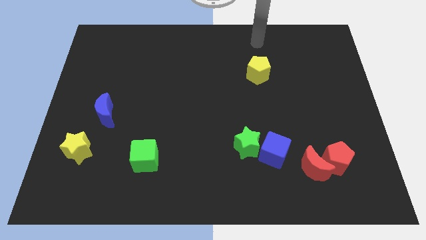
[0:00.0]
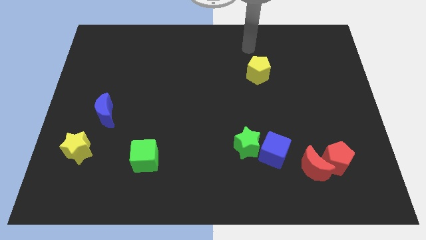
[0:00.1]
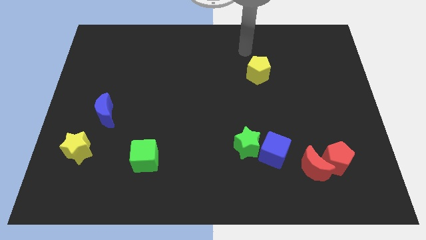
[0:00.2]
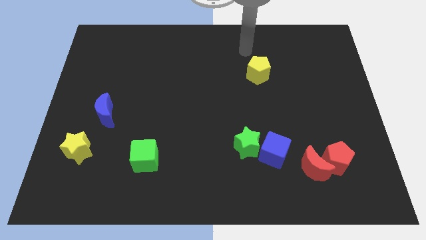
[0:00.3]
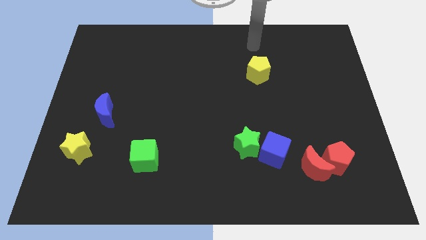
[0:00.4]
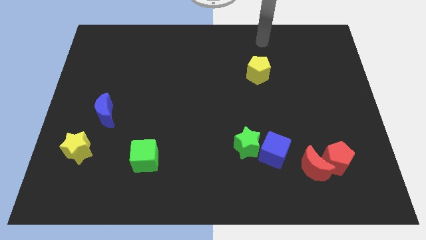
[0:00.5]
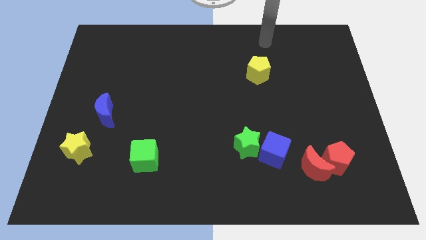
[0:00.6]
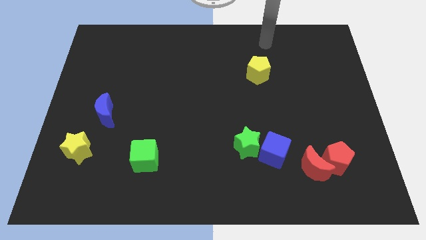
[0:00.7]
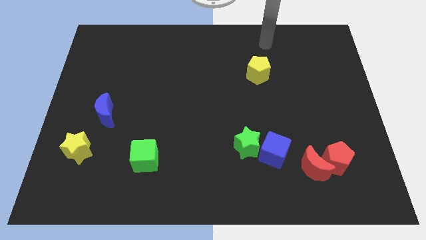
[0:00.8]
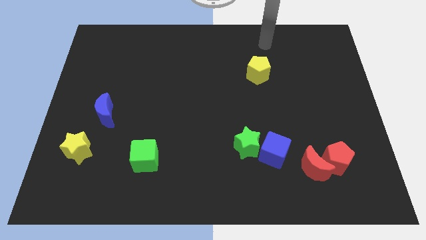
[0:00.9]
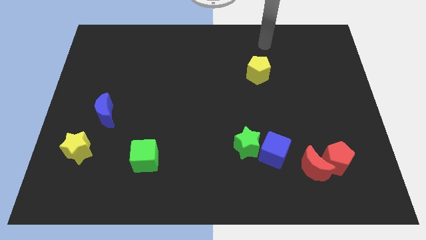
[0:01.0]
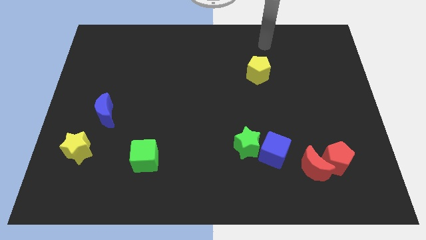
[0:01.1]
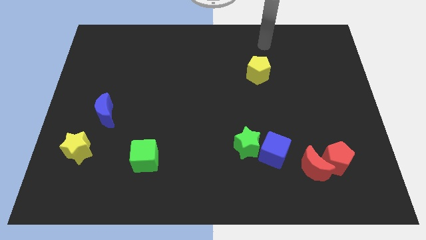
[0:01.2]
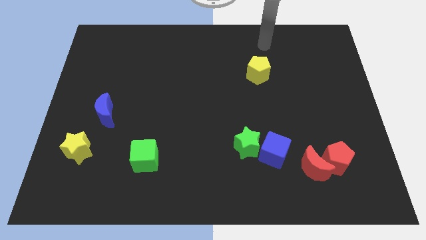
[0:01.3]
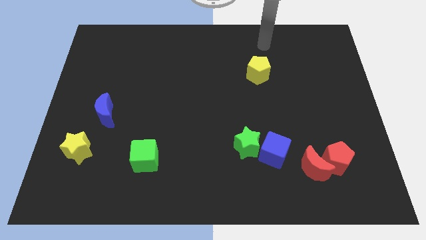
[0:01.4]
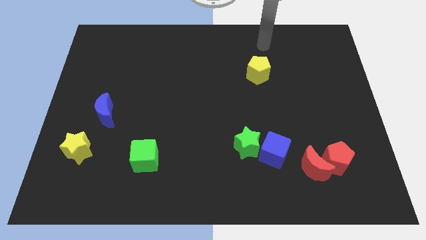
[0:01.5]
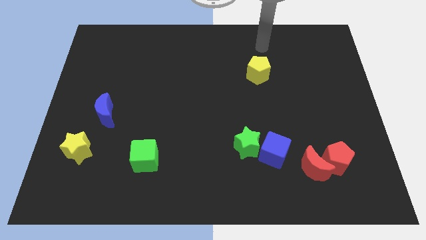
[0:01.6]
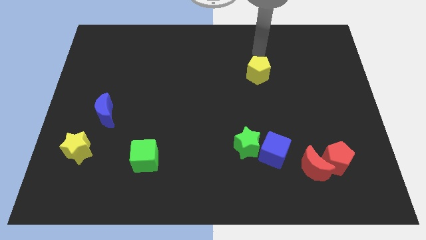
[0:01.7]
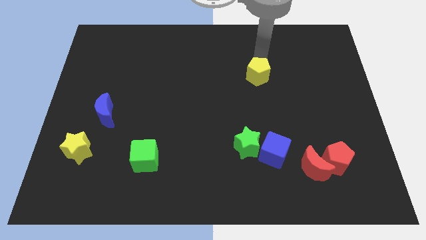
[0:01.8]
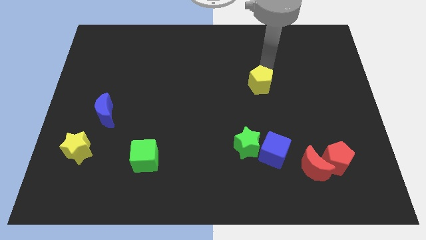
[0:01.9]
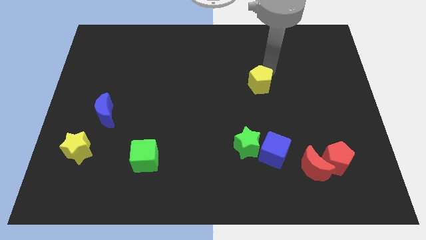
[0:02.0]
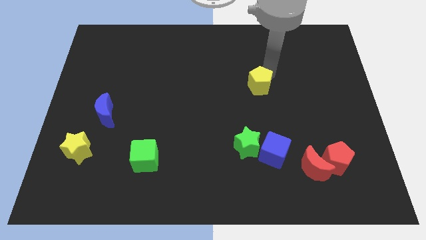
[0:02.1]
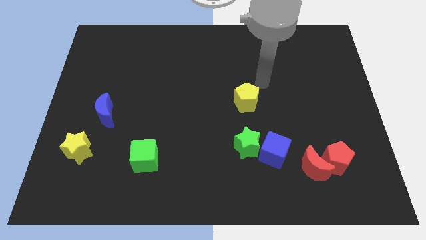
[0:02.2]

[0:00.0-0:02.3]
drag the yellow pentagon above the green star

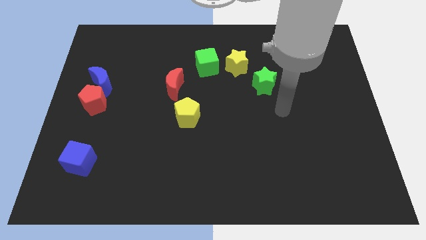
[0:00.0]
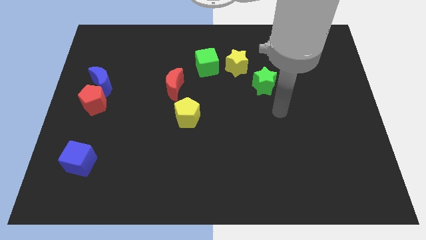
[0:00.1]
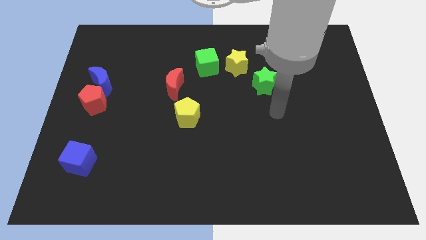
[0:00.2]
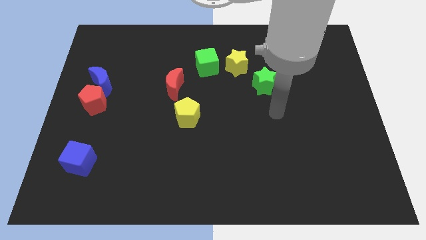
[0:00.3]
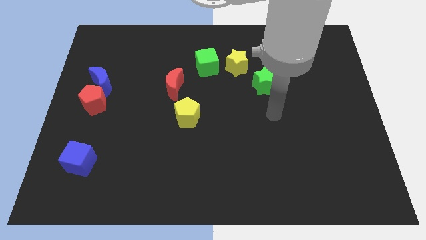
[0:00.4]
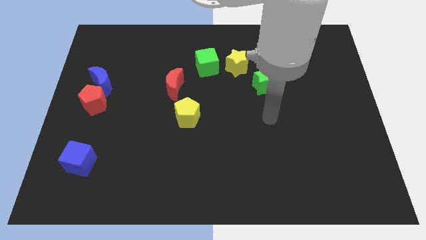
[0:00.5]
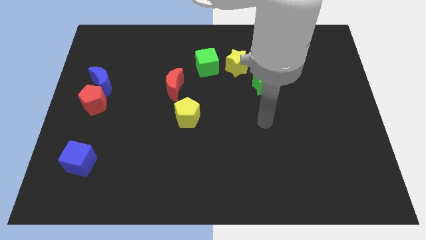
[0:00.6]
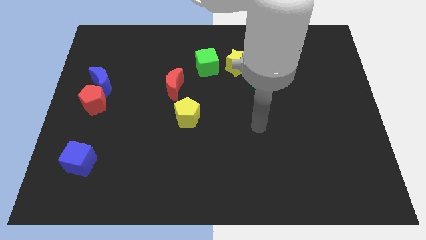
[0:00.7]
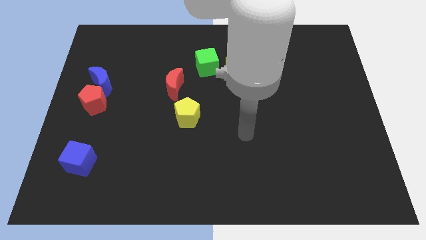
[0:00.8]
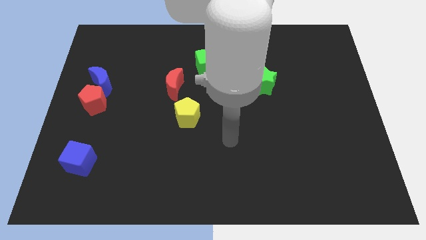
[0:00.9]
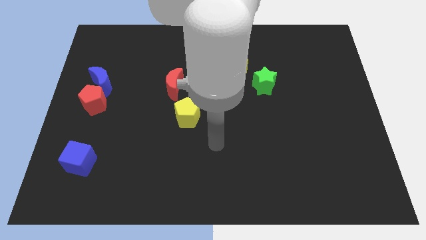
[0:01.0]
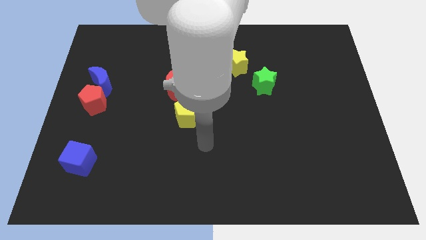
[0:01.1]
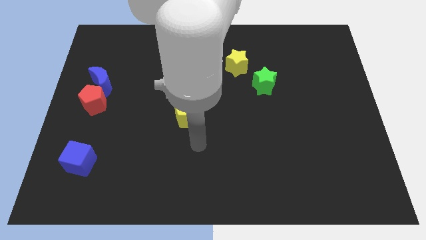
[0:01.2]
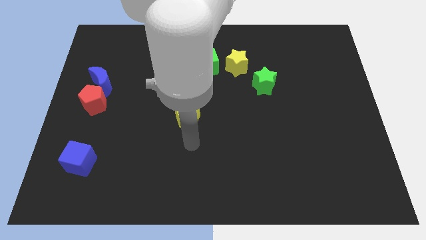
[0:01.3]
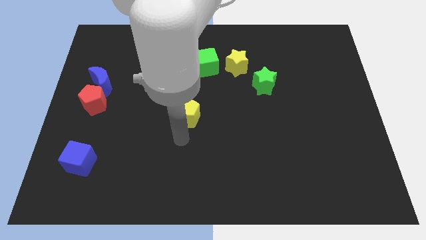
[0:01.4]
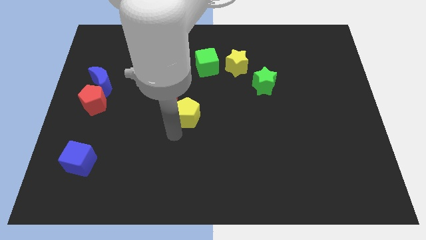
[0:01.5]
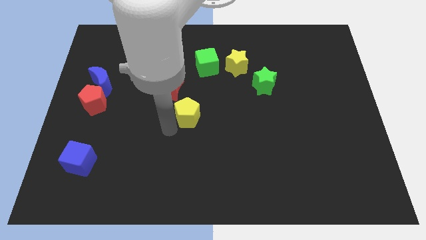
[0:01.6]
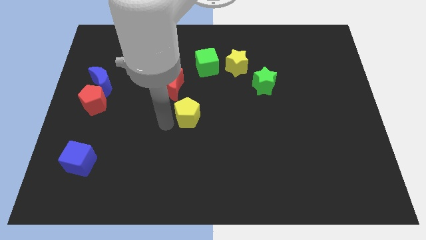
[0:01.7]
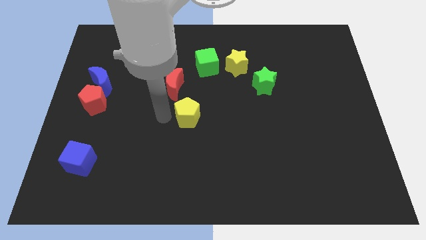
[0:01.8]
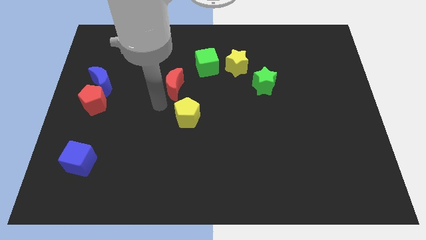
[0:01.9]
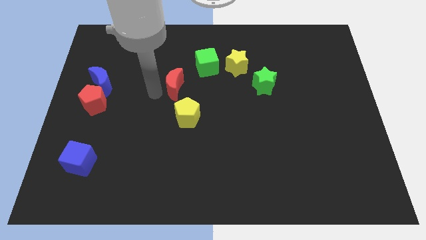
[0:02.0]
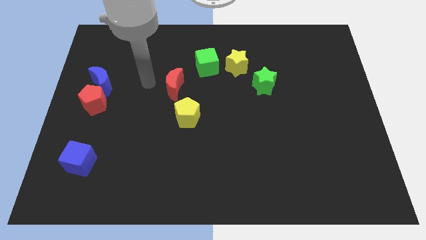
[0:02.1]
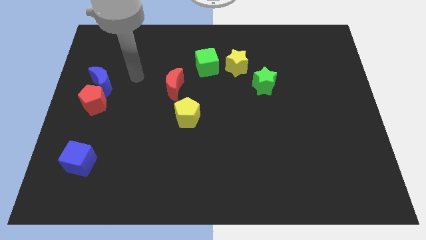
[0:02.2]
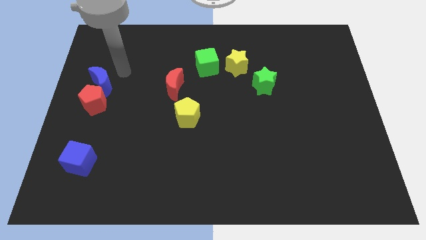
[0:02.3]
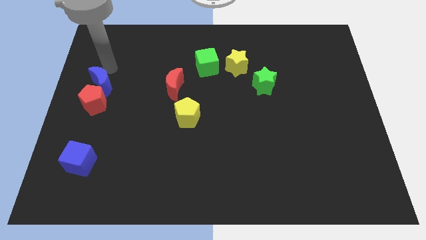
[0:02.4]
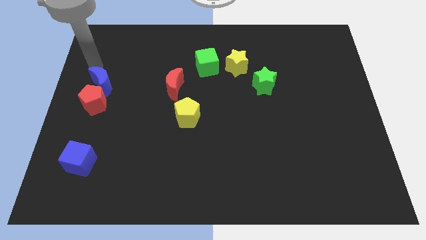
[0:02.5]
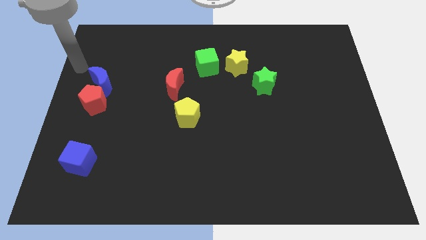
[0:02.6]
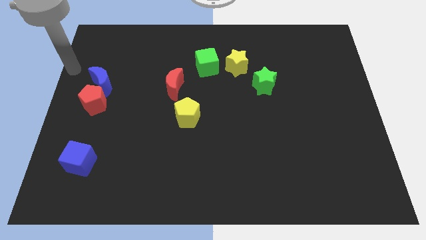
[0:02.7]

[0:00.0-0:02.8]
move the arm away from the green star

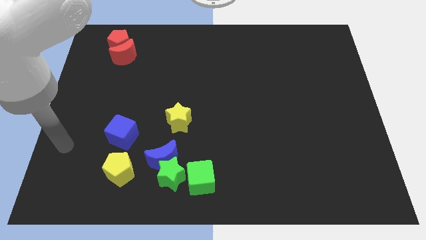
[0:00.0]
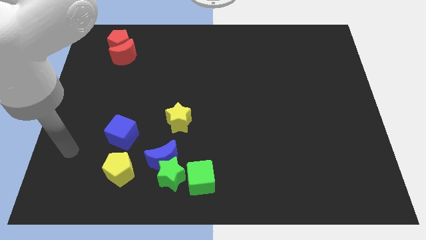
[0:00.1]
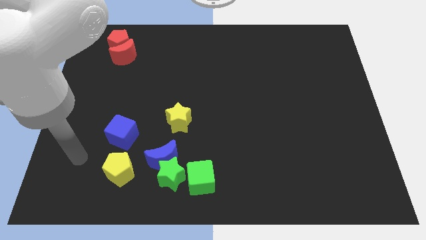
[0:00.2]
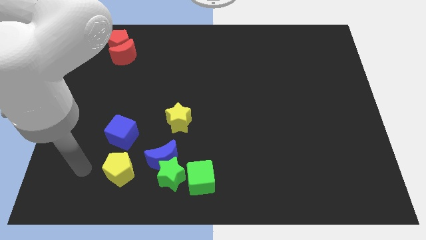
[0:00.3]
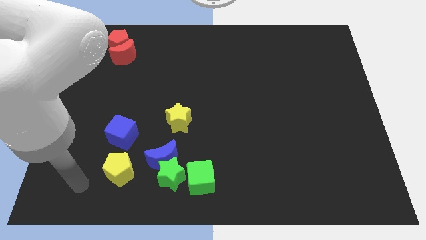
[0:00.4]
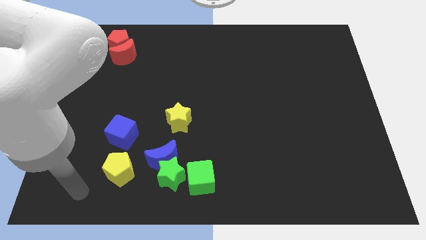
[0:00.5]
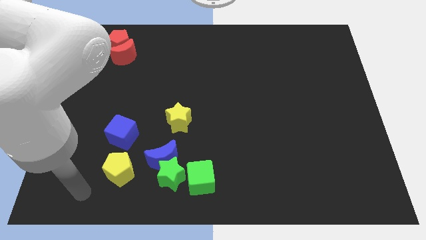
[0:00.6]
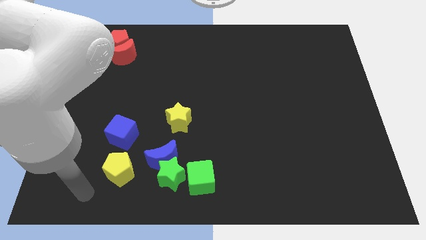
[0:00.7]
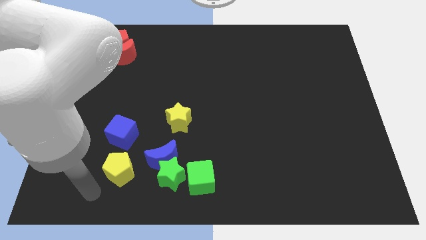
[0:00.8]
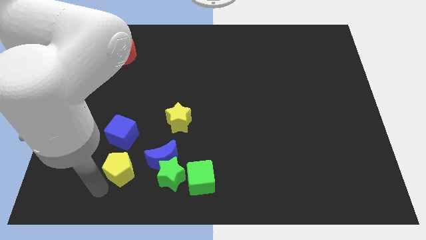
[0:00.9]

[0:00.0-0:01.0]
move the arm to the yellow pentagon

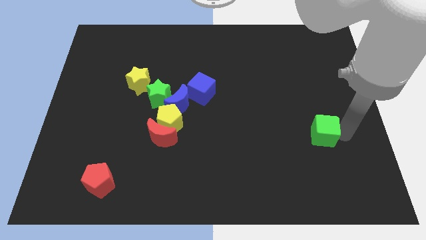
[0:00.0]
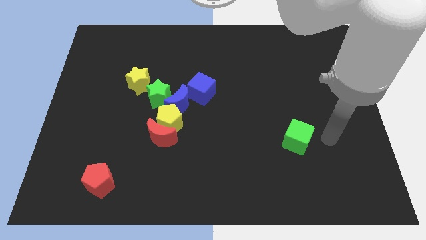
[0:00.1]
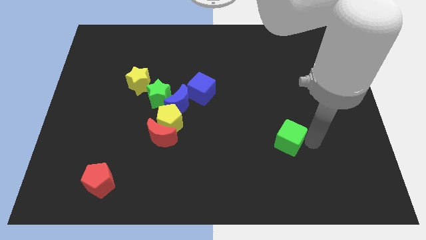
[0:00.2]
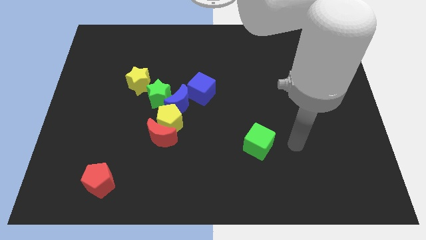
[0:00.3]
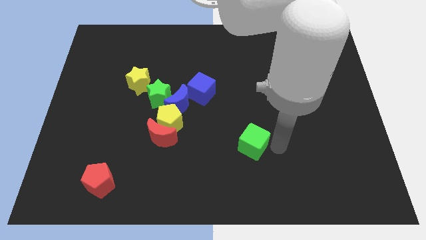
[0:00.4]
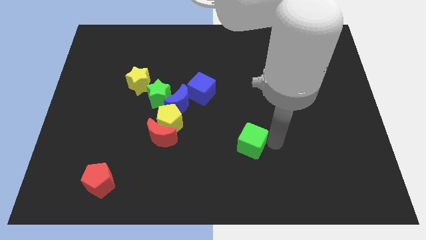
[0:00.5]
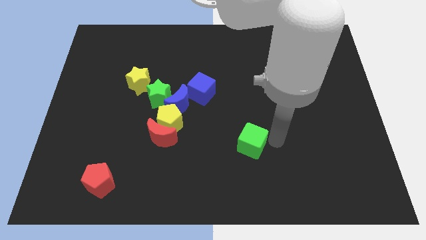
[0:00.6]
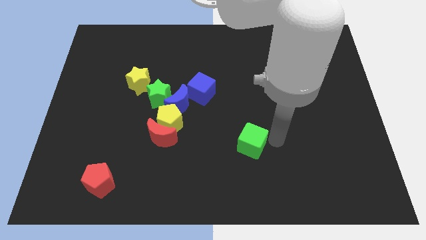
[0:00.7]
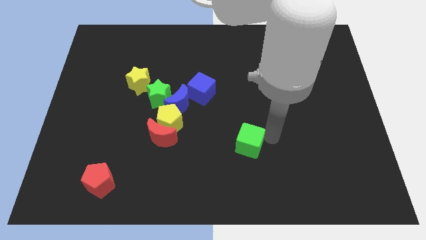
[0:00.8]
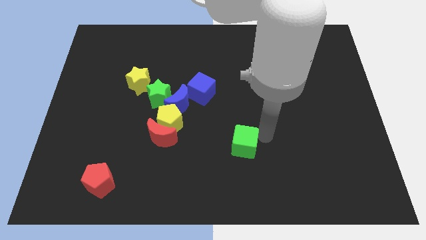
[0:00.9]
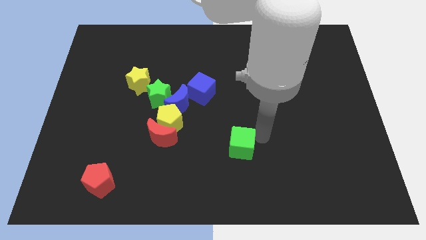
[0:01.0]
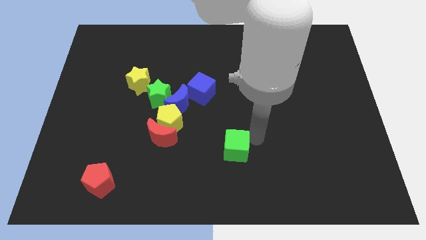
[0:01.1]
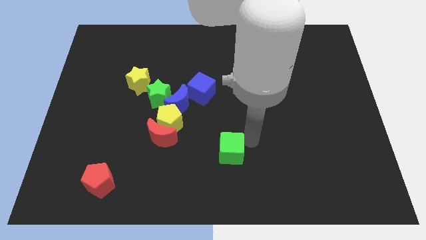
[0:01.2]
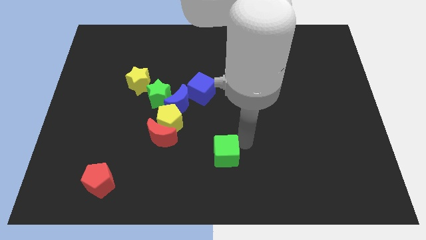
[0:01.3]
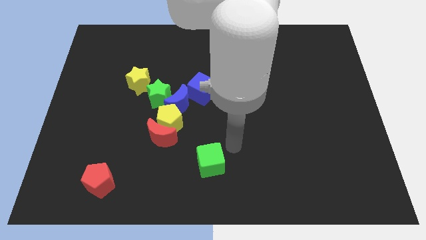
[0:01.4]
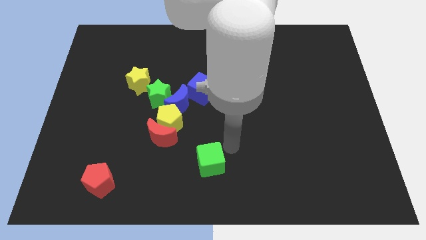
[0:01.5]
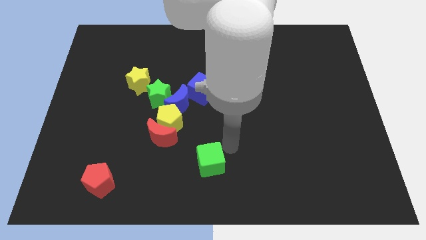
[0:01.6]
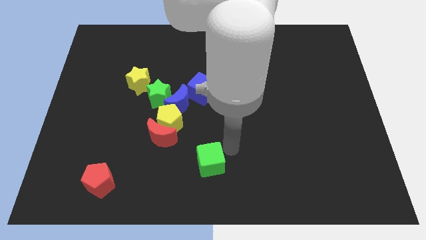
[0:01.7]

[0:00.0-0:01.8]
place green cube vertical to blue cube

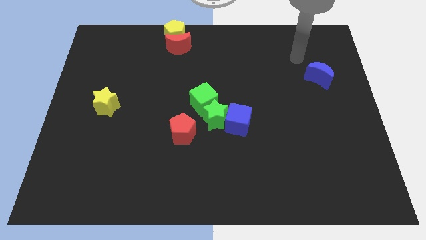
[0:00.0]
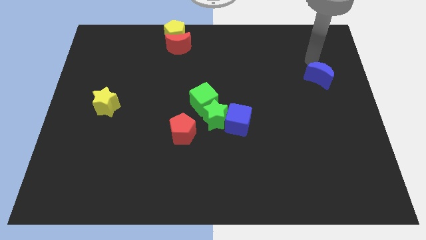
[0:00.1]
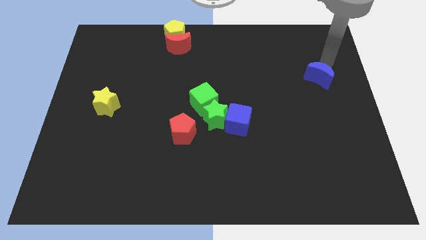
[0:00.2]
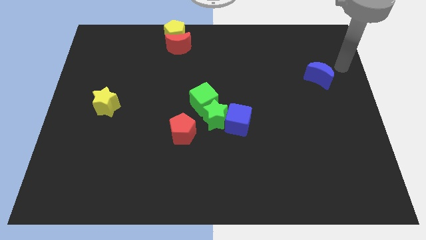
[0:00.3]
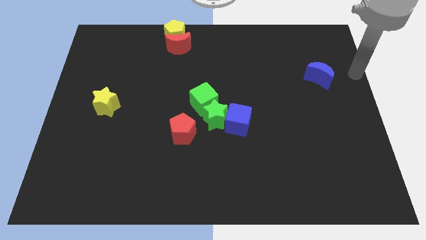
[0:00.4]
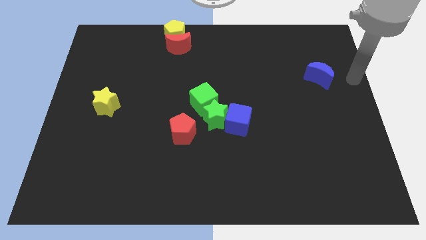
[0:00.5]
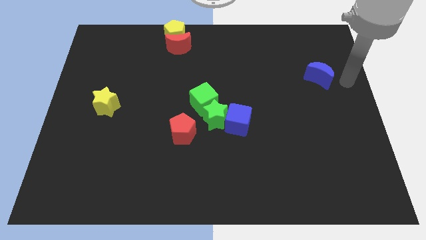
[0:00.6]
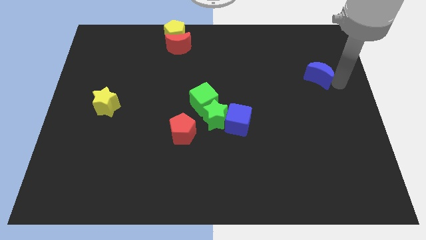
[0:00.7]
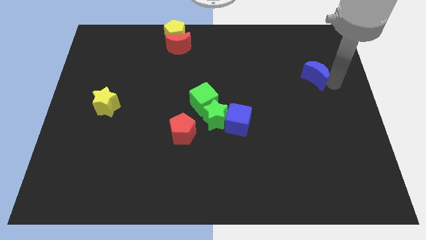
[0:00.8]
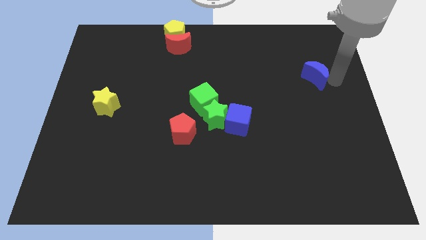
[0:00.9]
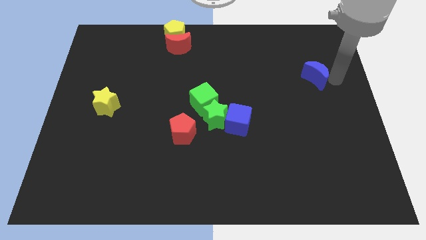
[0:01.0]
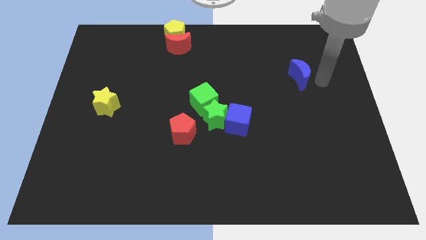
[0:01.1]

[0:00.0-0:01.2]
slightly push the blue moon towards the center
